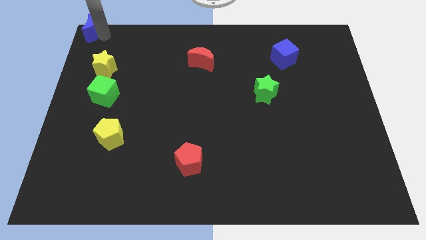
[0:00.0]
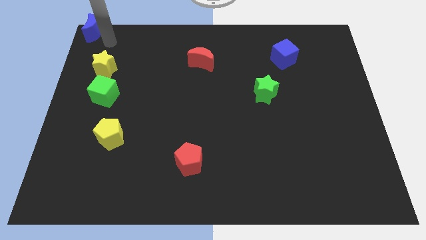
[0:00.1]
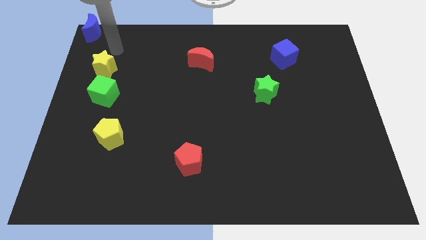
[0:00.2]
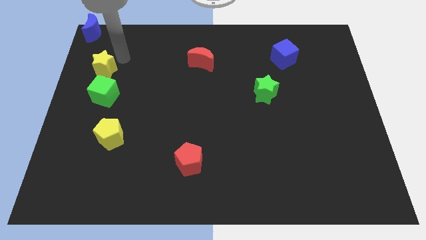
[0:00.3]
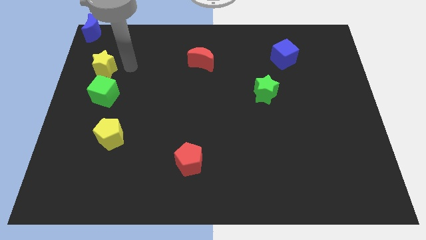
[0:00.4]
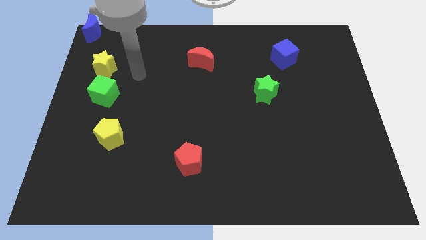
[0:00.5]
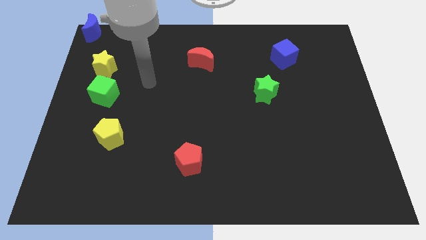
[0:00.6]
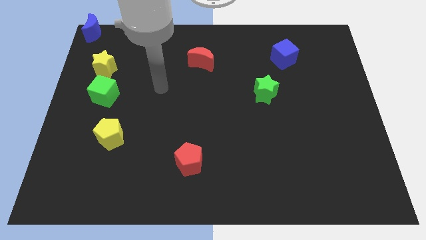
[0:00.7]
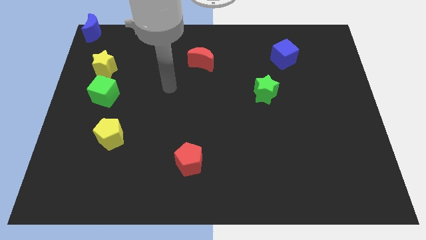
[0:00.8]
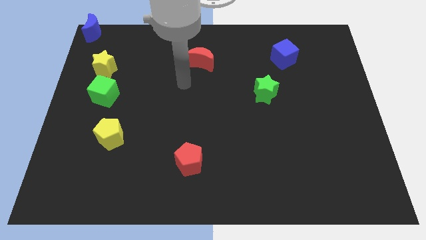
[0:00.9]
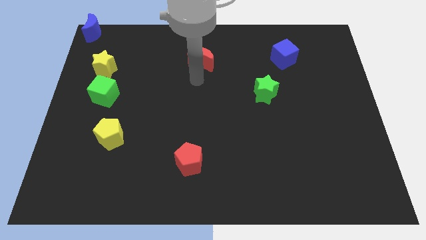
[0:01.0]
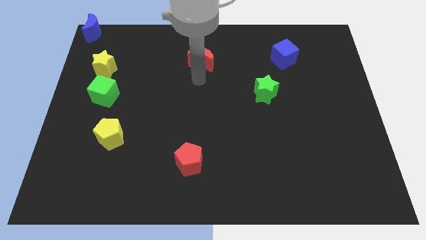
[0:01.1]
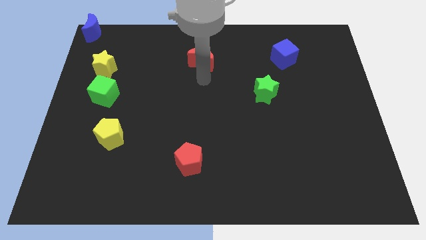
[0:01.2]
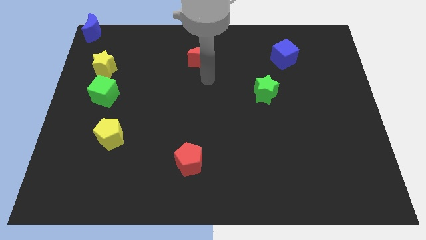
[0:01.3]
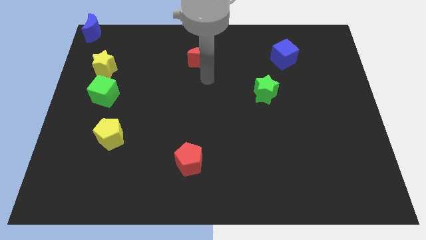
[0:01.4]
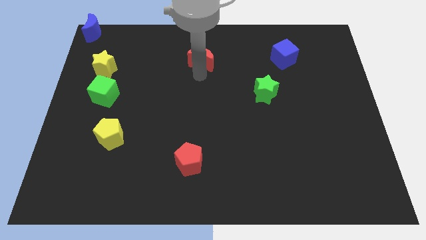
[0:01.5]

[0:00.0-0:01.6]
move your hand towards the bottom of the red crescent

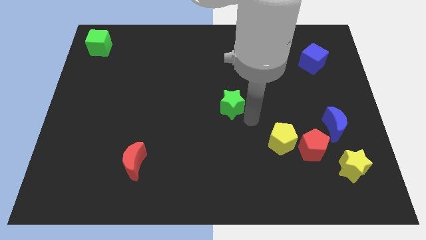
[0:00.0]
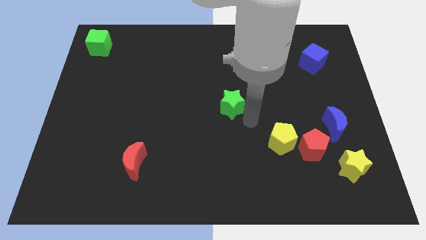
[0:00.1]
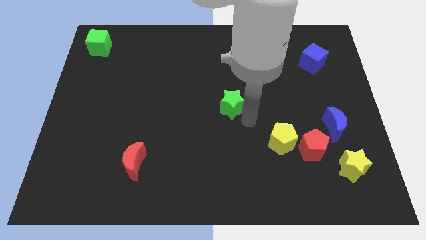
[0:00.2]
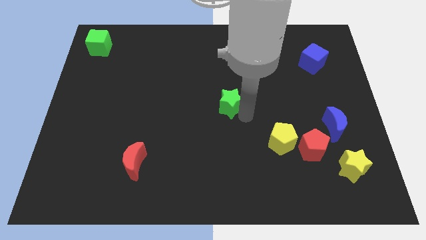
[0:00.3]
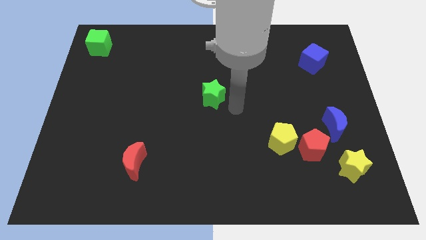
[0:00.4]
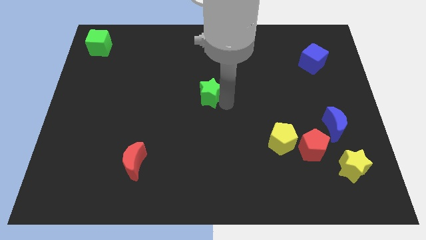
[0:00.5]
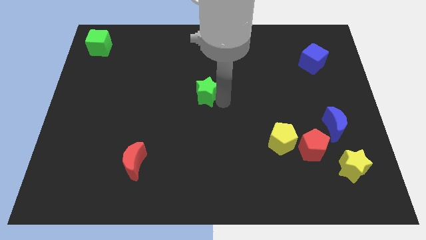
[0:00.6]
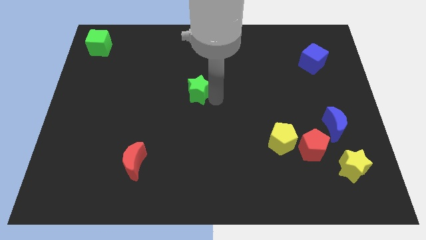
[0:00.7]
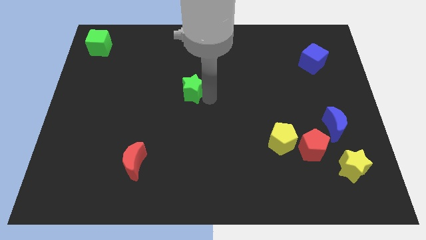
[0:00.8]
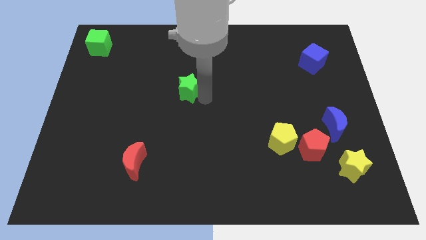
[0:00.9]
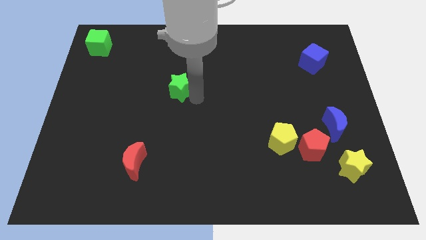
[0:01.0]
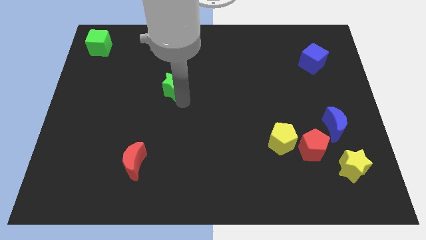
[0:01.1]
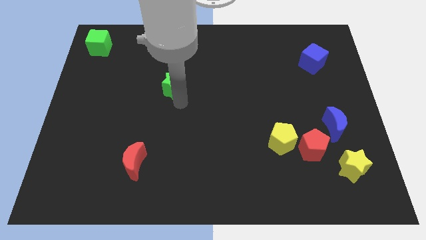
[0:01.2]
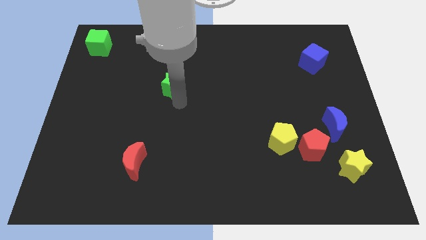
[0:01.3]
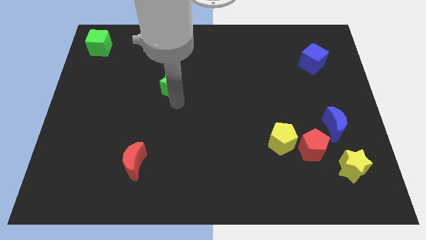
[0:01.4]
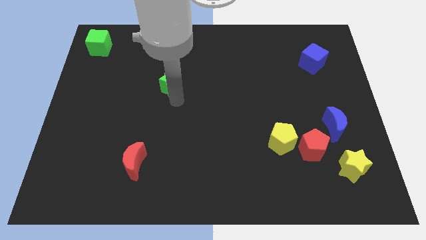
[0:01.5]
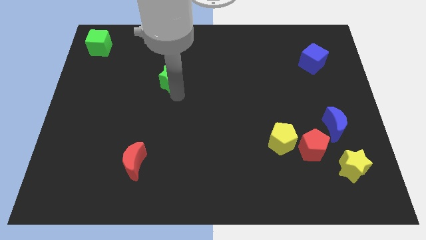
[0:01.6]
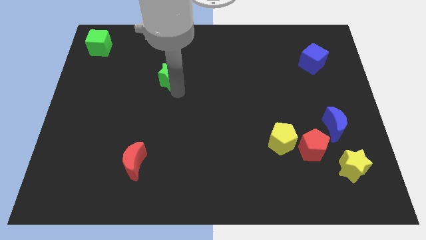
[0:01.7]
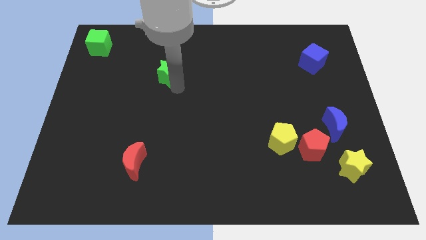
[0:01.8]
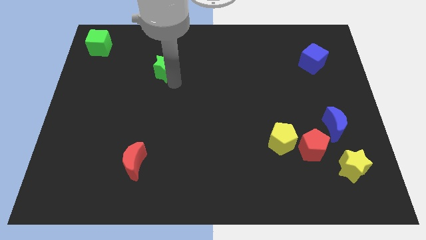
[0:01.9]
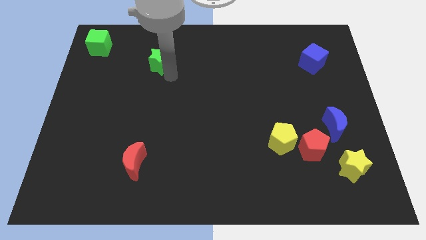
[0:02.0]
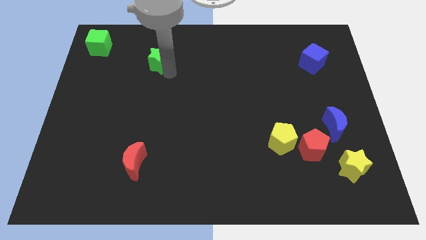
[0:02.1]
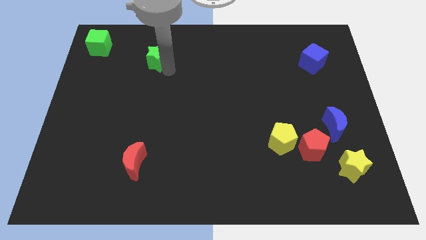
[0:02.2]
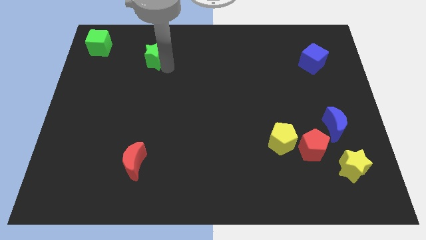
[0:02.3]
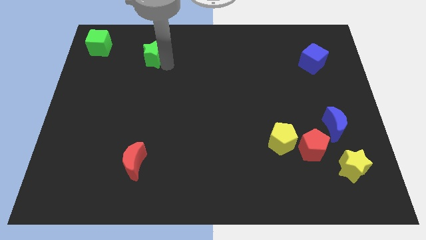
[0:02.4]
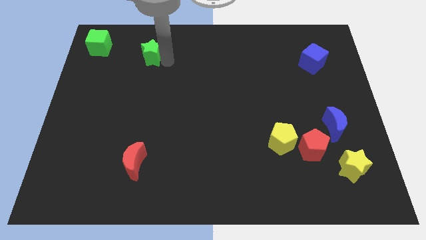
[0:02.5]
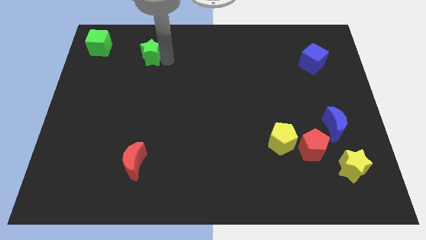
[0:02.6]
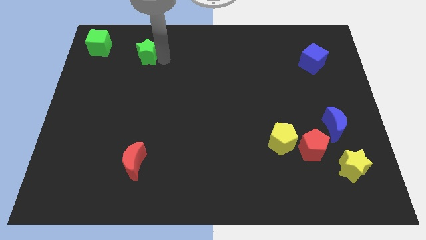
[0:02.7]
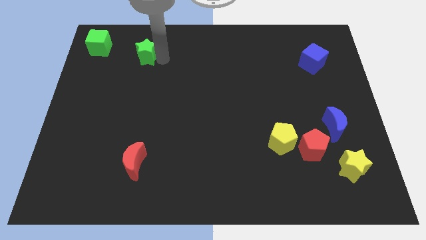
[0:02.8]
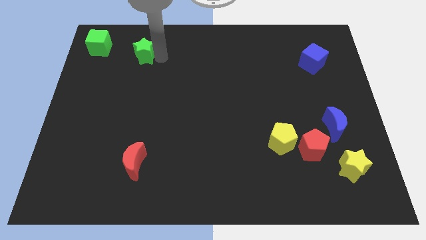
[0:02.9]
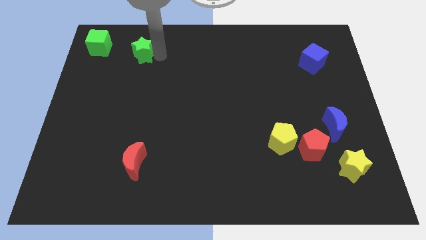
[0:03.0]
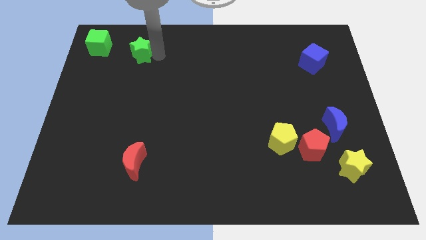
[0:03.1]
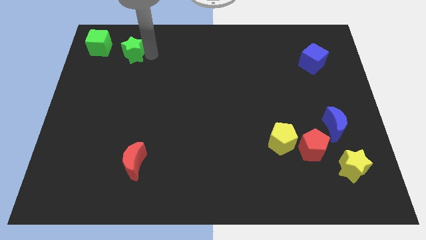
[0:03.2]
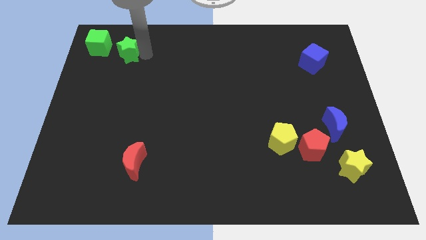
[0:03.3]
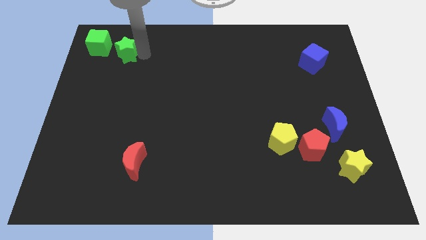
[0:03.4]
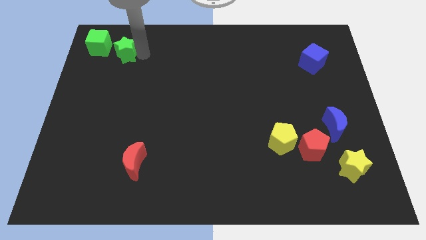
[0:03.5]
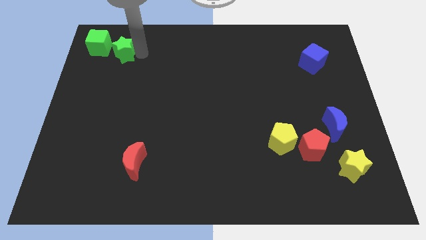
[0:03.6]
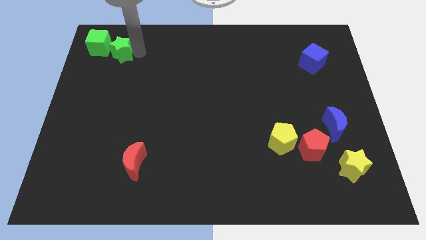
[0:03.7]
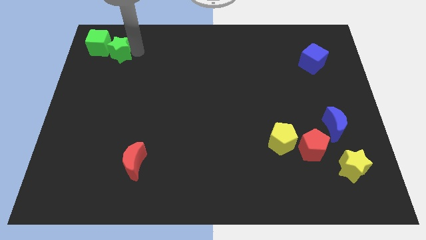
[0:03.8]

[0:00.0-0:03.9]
place the green star to the right of the green cube

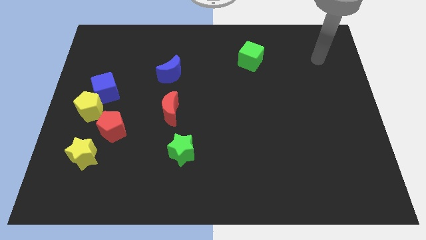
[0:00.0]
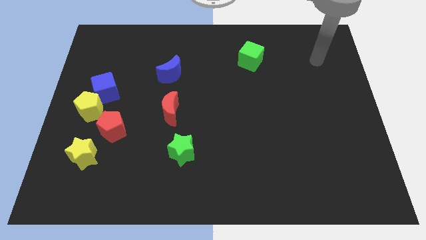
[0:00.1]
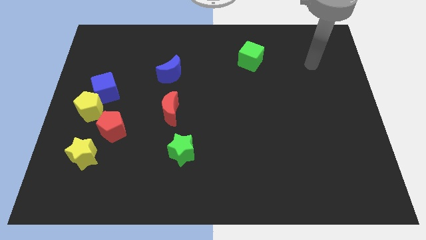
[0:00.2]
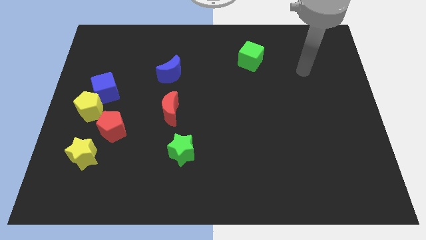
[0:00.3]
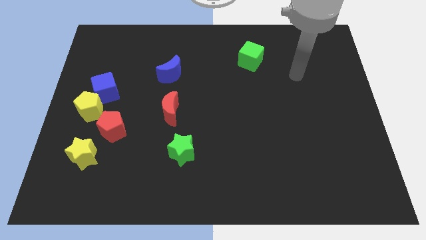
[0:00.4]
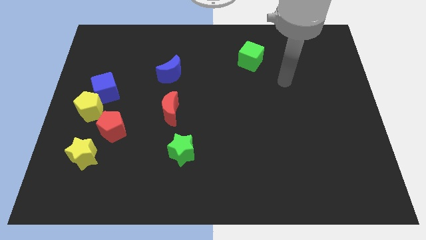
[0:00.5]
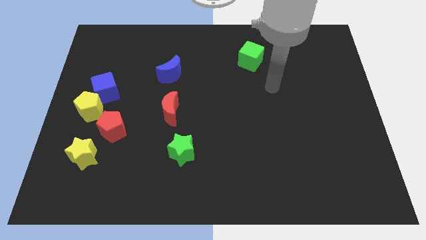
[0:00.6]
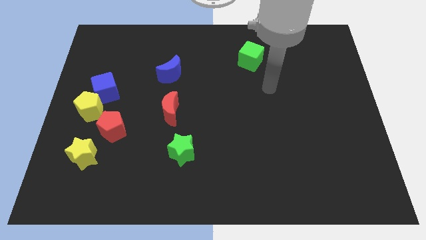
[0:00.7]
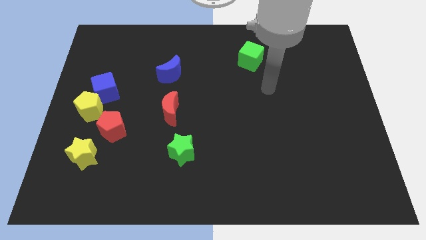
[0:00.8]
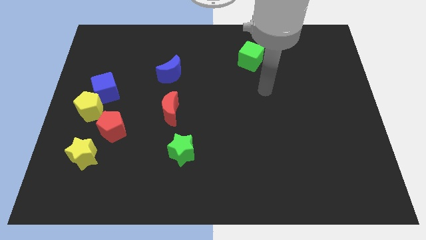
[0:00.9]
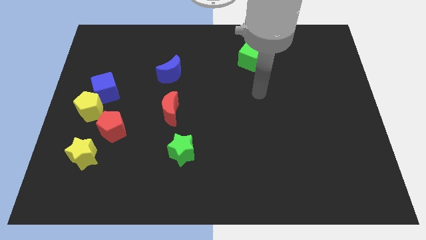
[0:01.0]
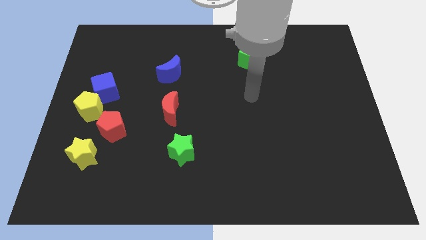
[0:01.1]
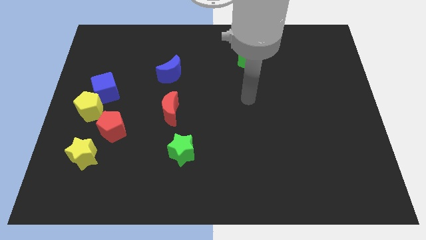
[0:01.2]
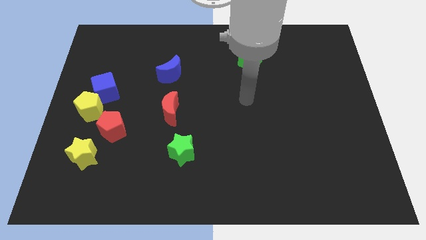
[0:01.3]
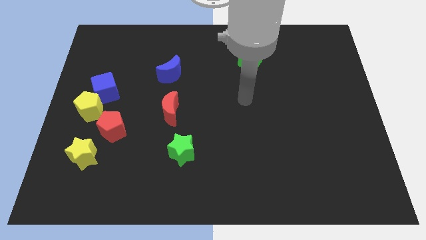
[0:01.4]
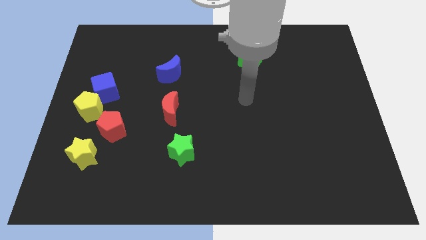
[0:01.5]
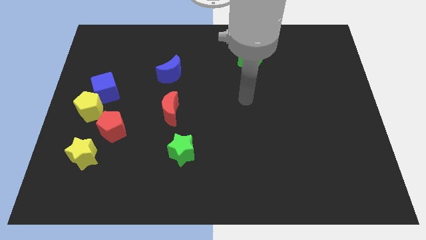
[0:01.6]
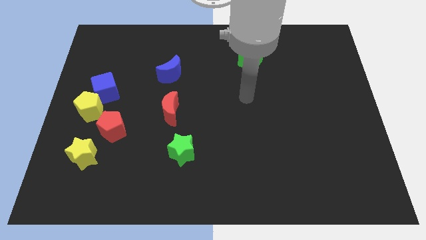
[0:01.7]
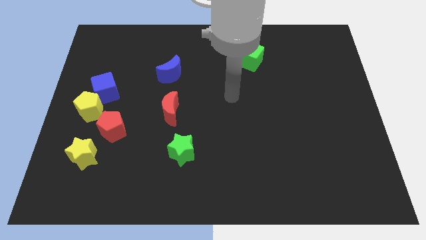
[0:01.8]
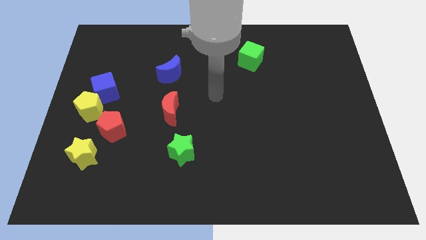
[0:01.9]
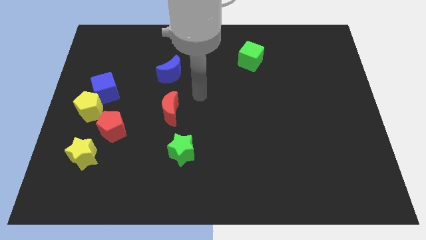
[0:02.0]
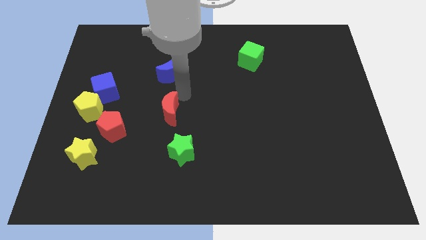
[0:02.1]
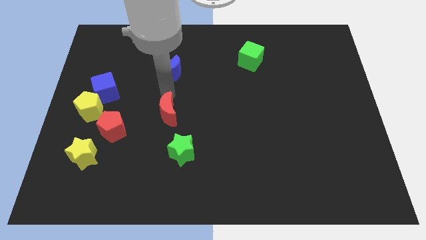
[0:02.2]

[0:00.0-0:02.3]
tap at the top side of the red crescent

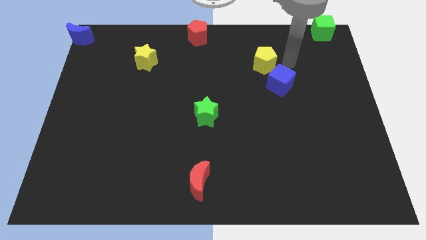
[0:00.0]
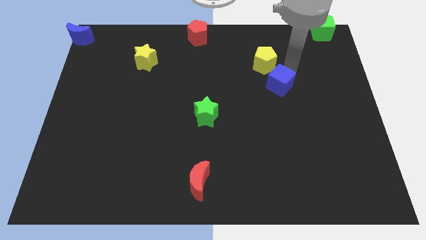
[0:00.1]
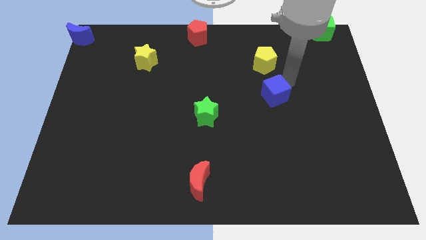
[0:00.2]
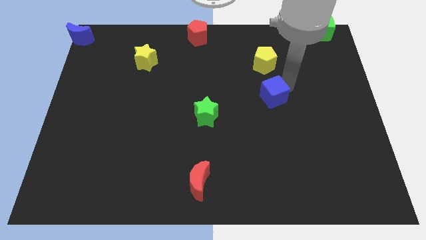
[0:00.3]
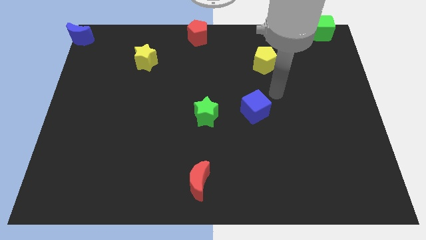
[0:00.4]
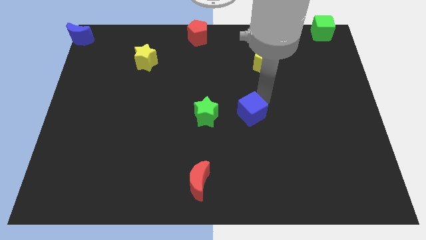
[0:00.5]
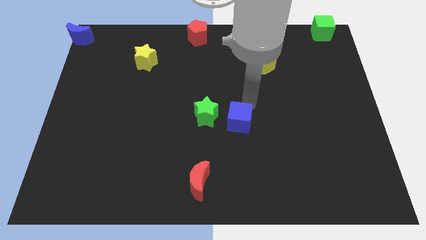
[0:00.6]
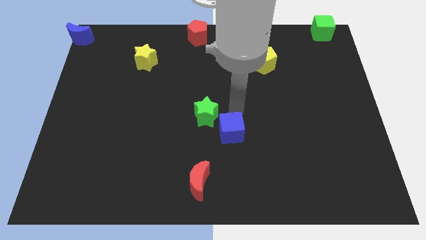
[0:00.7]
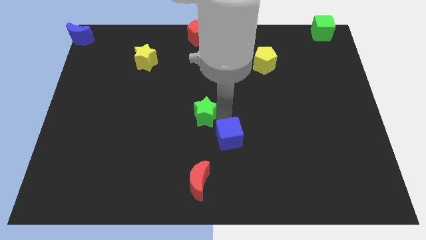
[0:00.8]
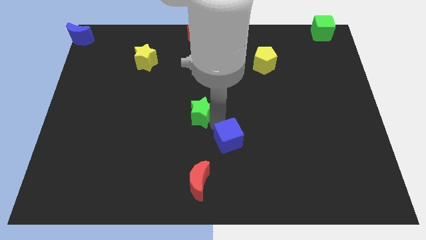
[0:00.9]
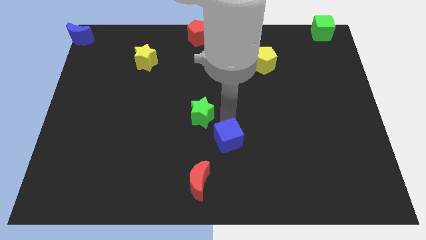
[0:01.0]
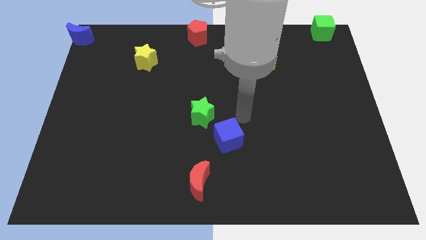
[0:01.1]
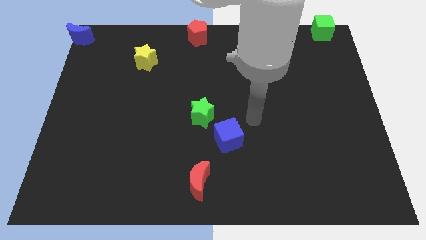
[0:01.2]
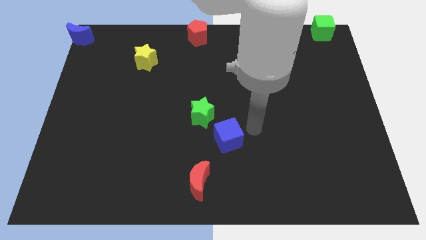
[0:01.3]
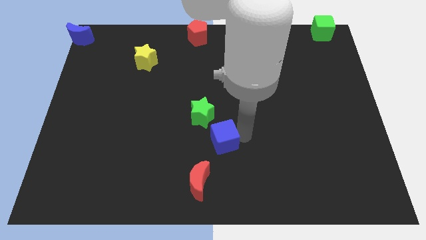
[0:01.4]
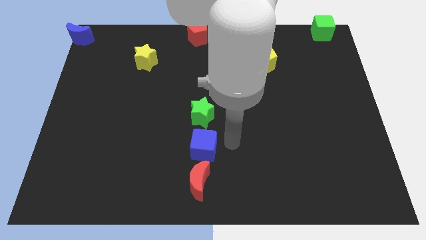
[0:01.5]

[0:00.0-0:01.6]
move the blue cube in between the green star and the red crescent
